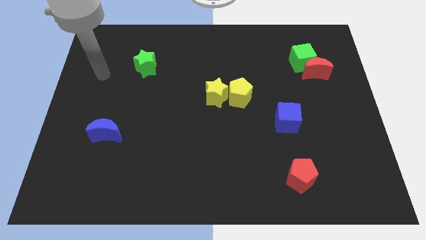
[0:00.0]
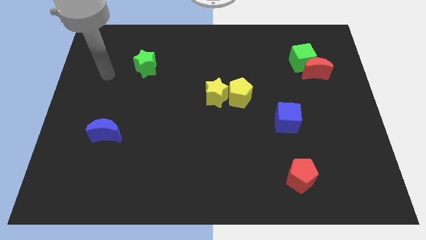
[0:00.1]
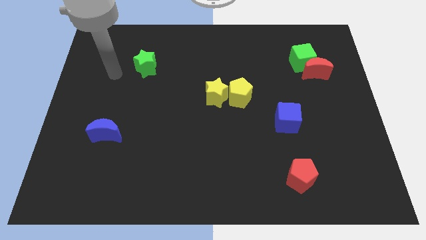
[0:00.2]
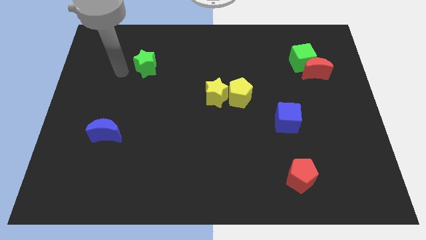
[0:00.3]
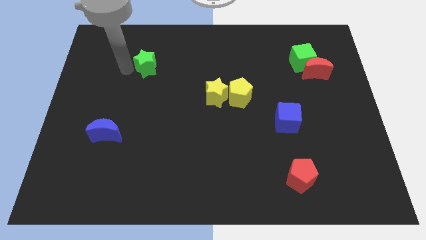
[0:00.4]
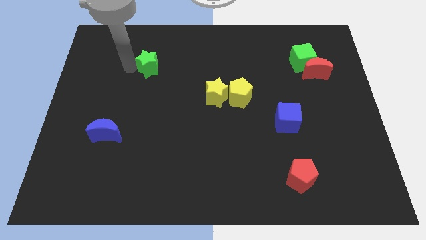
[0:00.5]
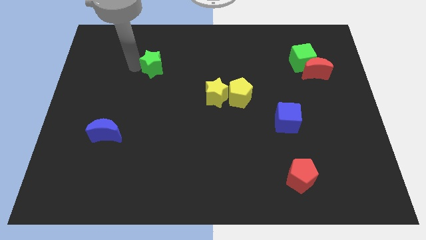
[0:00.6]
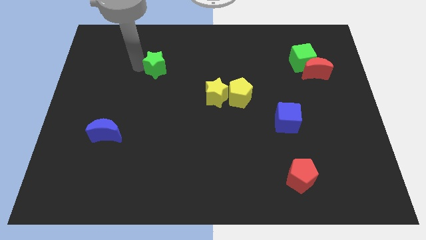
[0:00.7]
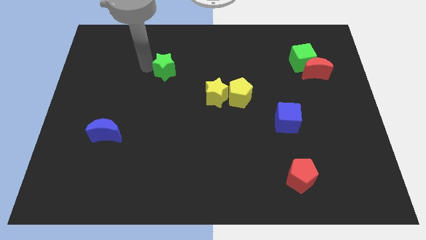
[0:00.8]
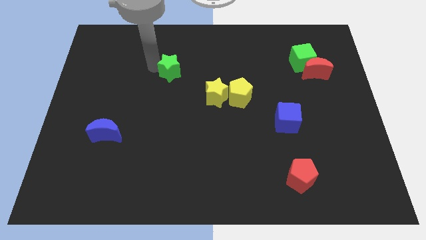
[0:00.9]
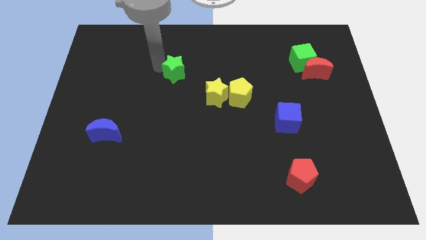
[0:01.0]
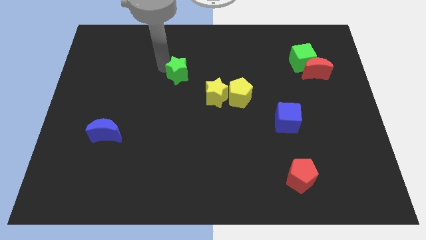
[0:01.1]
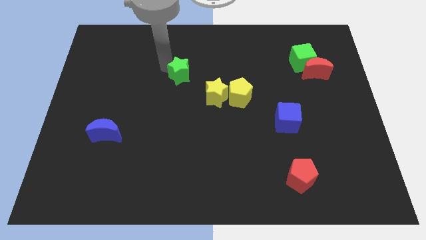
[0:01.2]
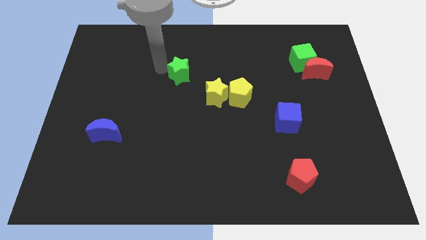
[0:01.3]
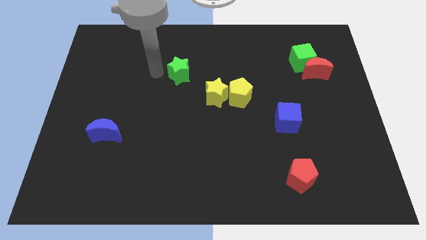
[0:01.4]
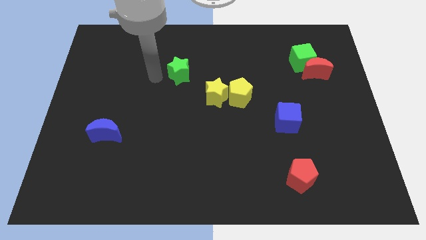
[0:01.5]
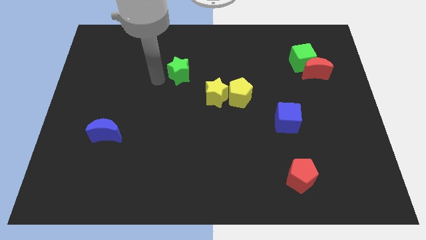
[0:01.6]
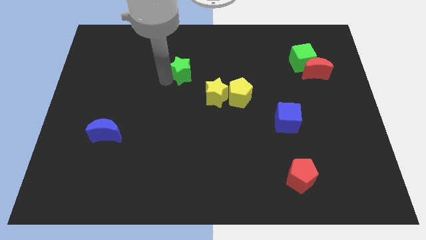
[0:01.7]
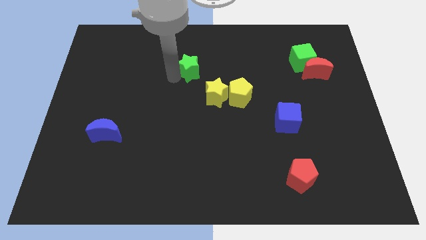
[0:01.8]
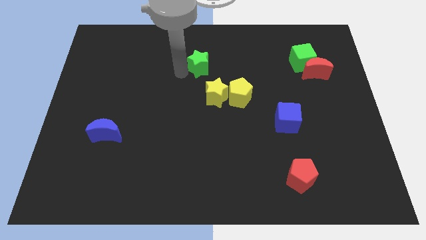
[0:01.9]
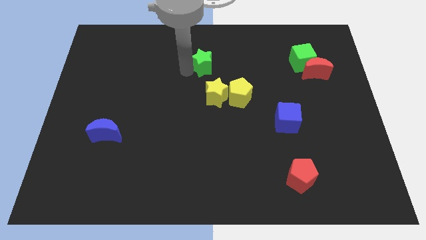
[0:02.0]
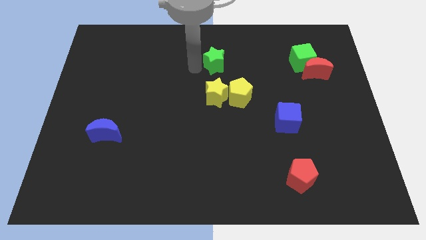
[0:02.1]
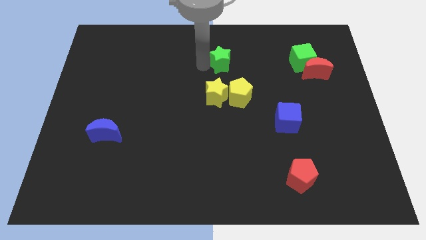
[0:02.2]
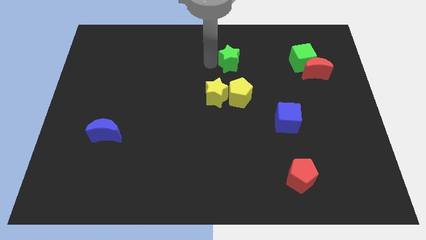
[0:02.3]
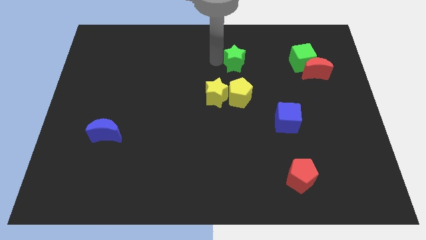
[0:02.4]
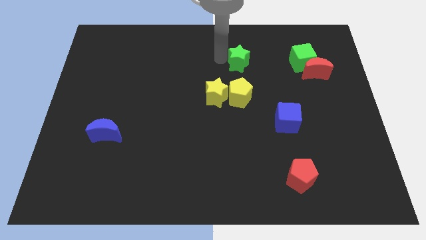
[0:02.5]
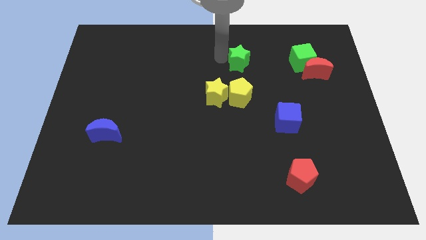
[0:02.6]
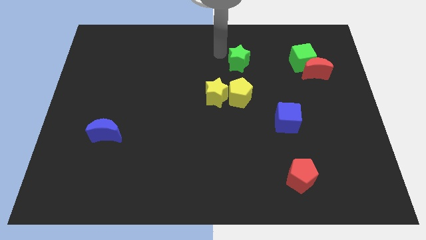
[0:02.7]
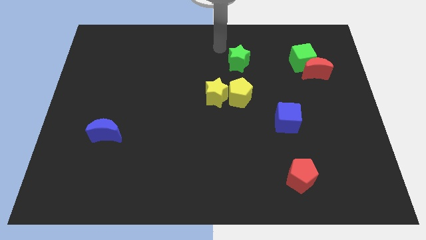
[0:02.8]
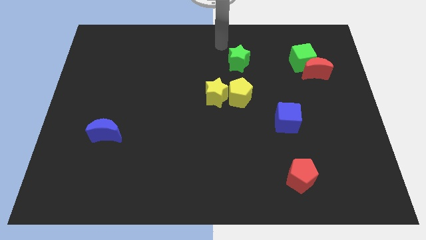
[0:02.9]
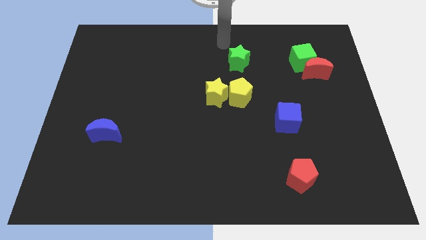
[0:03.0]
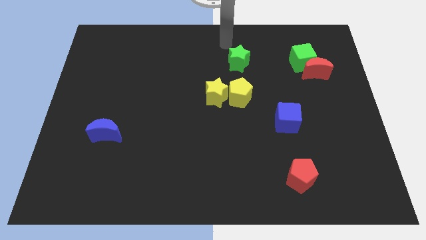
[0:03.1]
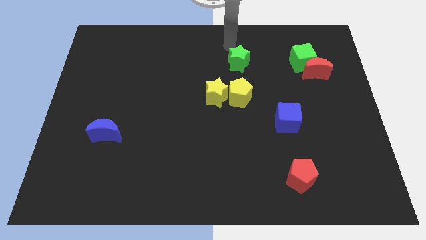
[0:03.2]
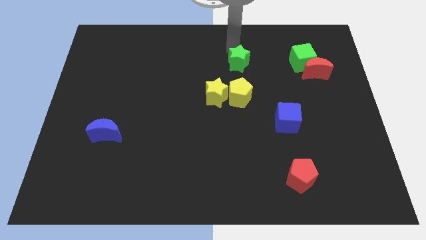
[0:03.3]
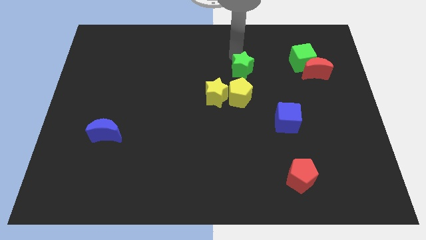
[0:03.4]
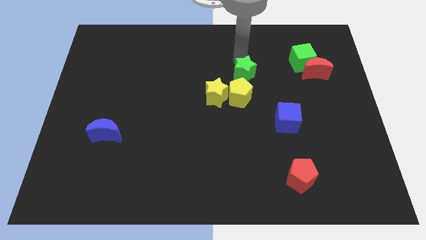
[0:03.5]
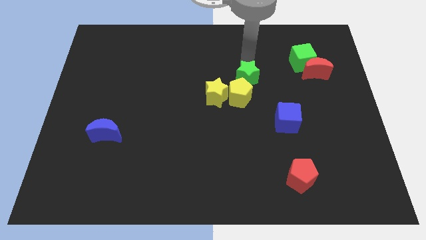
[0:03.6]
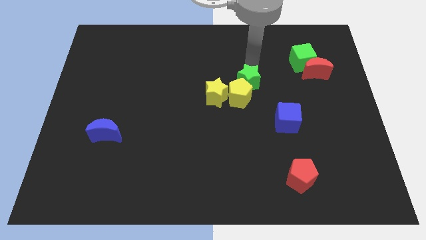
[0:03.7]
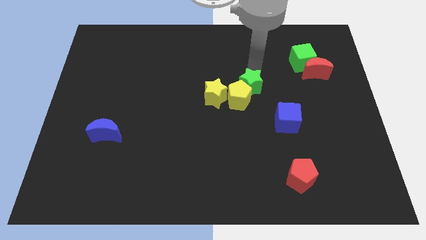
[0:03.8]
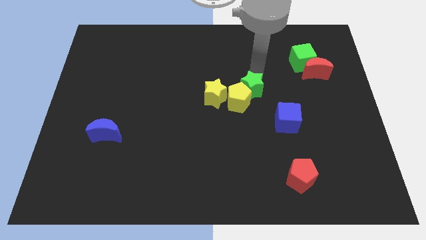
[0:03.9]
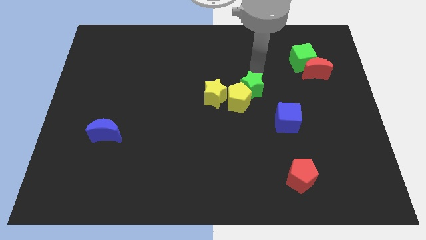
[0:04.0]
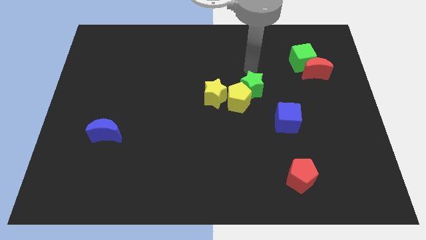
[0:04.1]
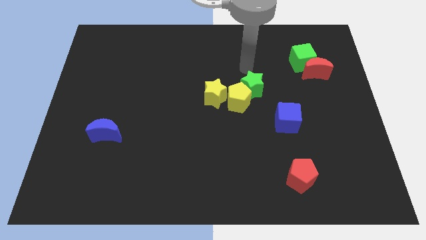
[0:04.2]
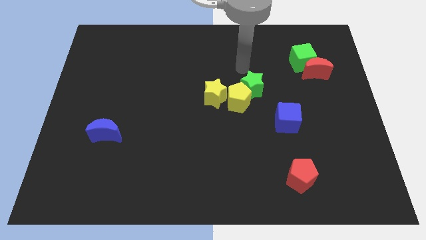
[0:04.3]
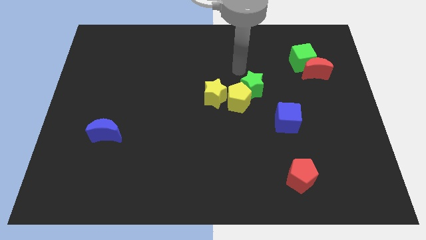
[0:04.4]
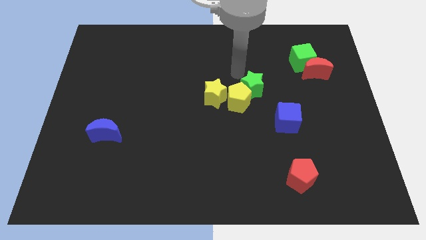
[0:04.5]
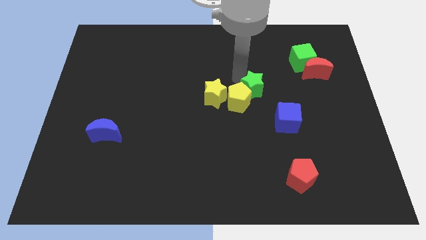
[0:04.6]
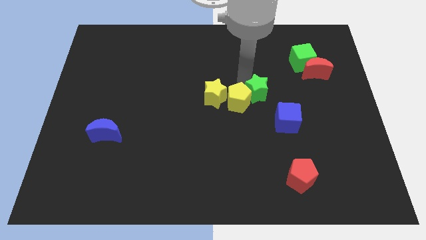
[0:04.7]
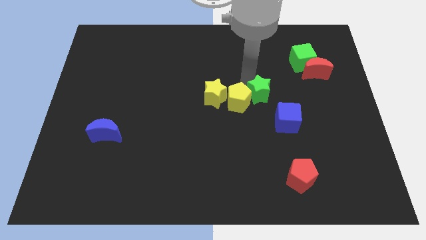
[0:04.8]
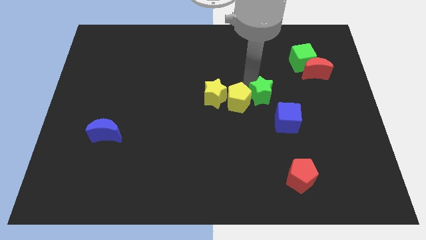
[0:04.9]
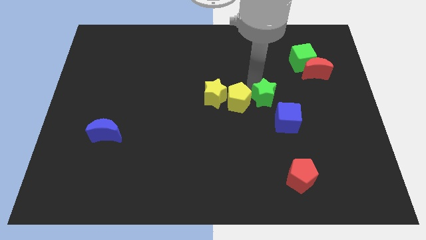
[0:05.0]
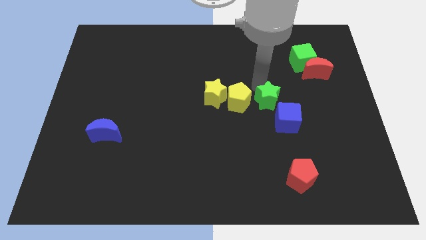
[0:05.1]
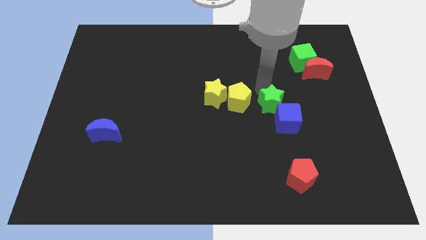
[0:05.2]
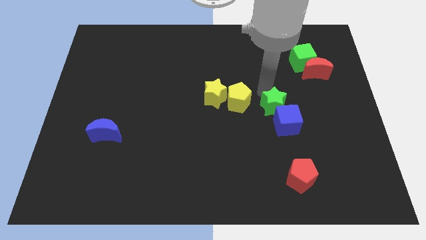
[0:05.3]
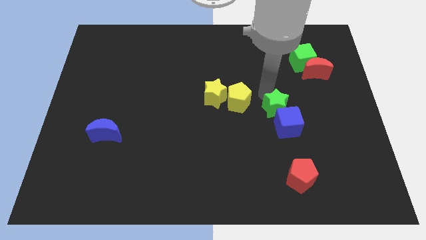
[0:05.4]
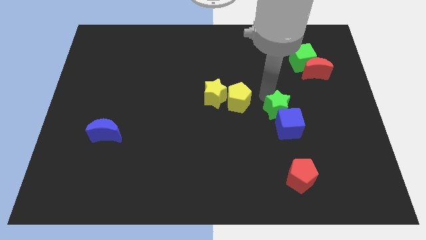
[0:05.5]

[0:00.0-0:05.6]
put the green star next to the blue cube

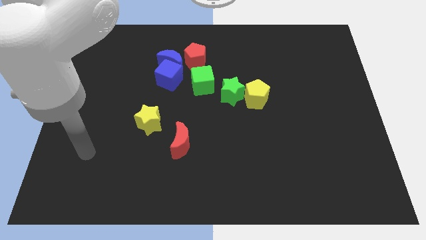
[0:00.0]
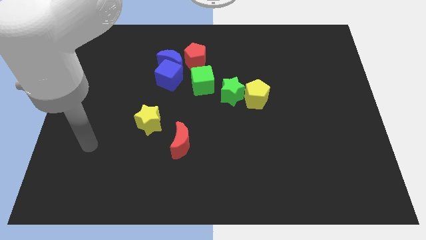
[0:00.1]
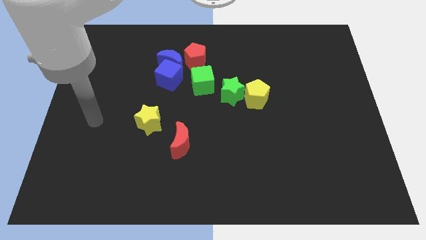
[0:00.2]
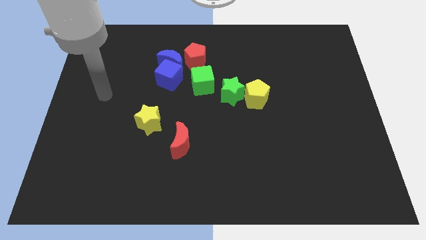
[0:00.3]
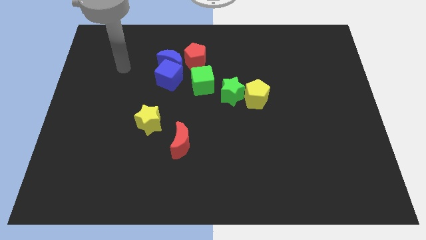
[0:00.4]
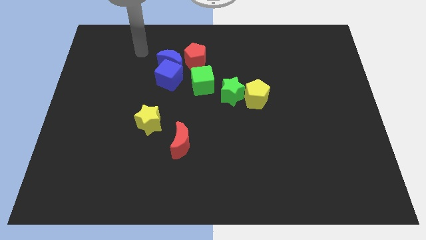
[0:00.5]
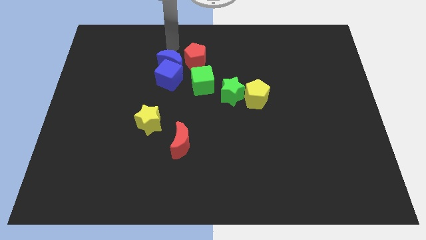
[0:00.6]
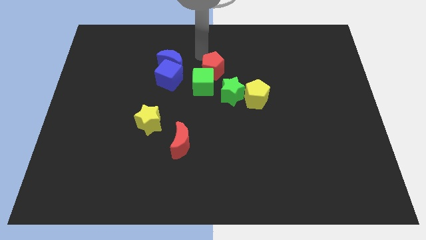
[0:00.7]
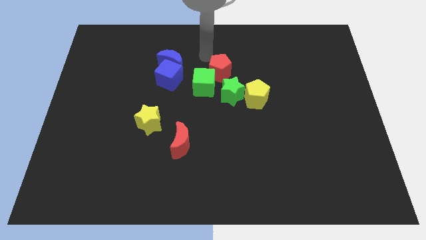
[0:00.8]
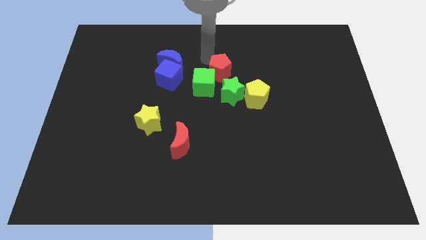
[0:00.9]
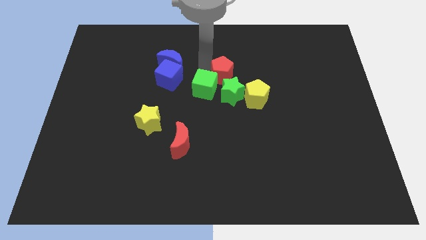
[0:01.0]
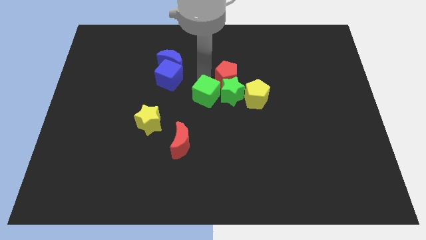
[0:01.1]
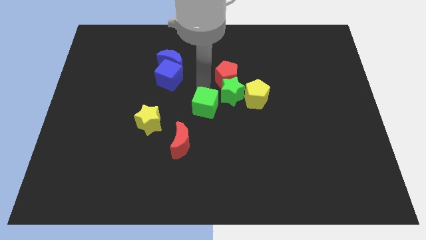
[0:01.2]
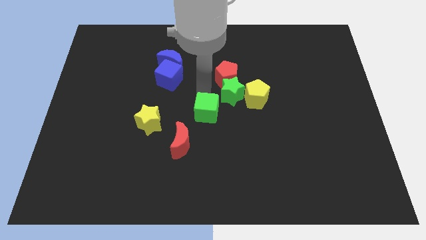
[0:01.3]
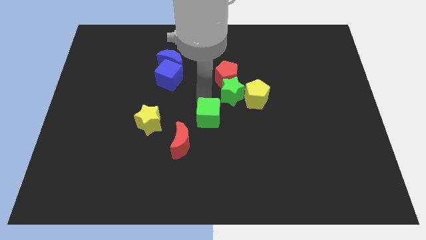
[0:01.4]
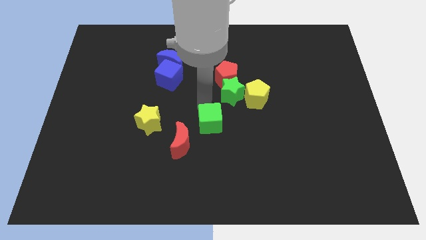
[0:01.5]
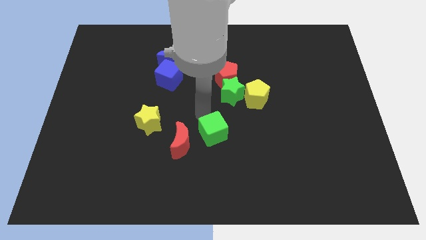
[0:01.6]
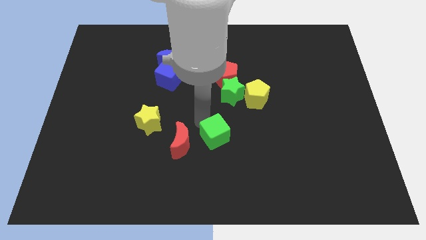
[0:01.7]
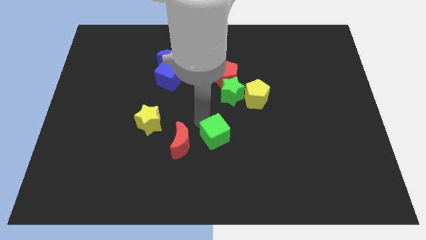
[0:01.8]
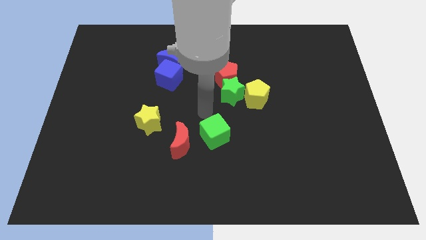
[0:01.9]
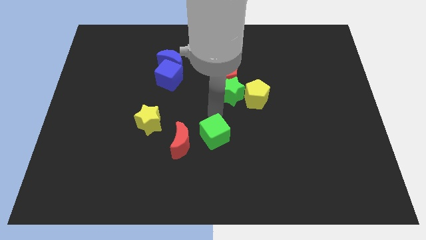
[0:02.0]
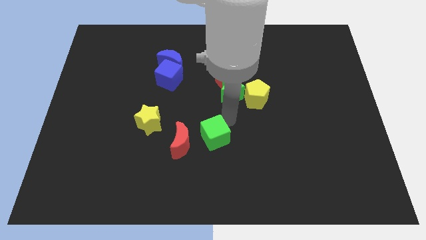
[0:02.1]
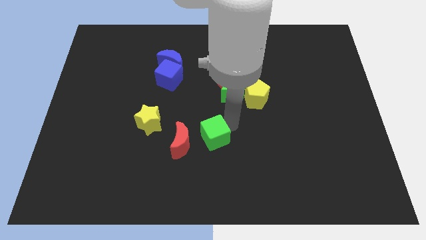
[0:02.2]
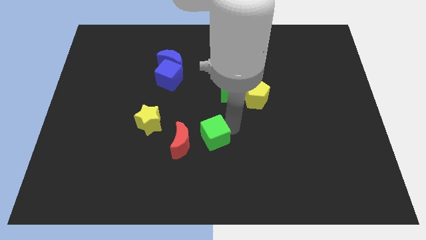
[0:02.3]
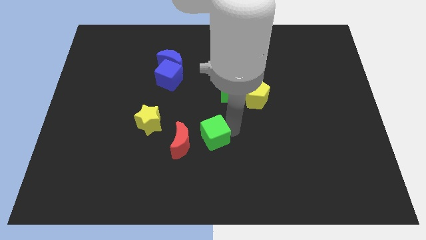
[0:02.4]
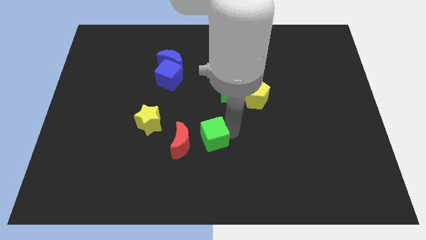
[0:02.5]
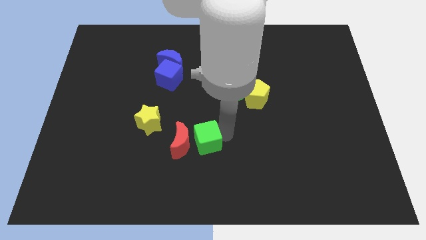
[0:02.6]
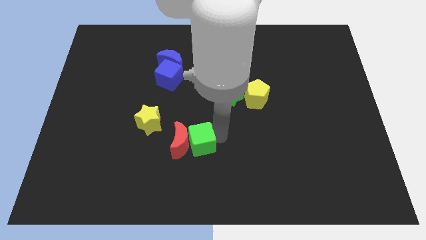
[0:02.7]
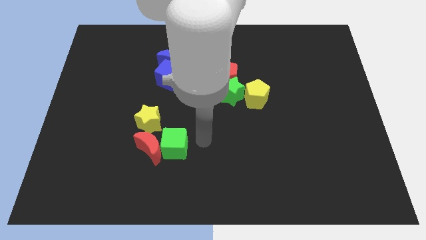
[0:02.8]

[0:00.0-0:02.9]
slide the green cube close to the red moon
